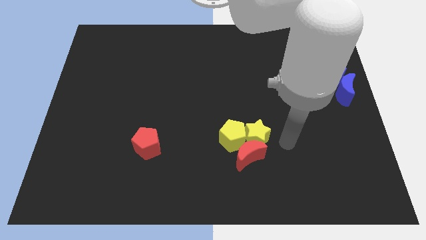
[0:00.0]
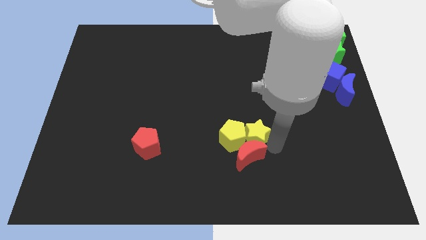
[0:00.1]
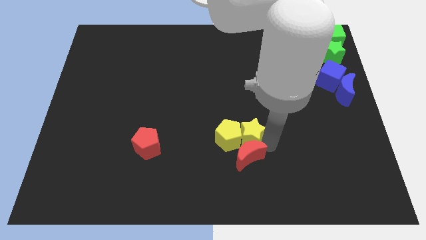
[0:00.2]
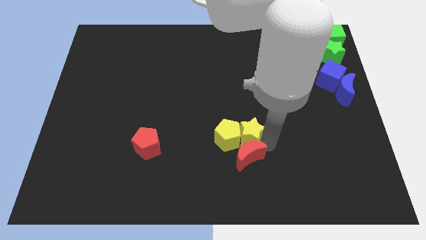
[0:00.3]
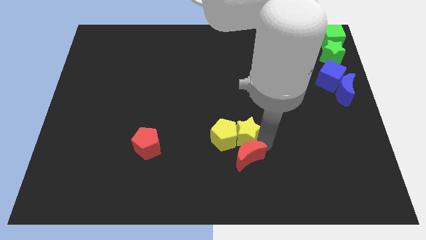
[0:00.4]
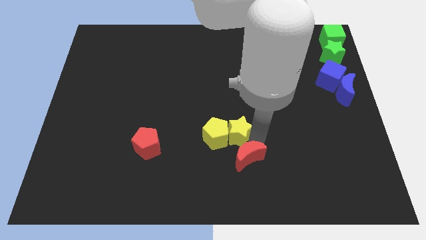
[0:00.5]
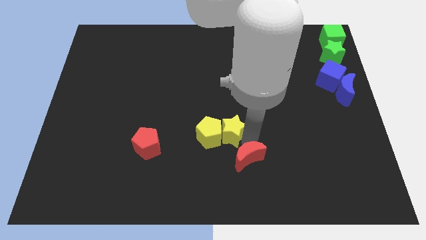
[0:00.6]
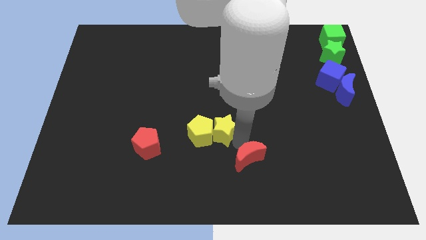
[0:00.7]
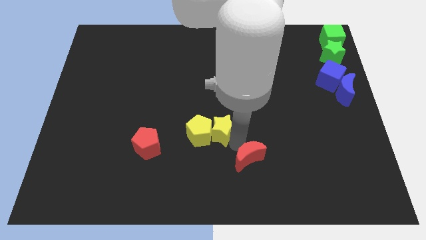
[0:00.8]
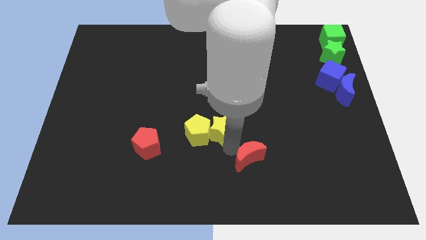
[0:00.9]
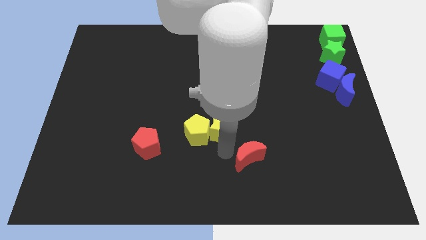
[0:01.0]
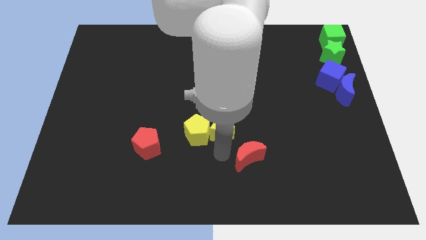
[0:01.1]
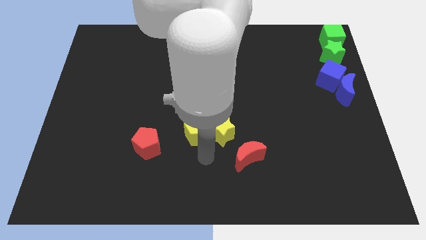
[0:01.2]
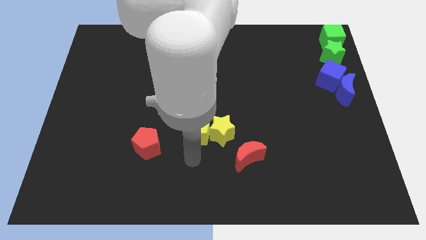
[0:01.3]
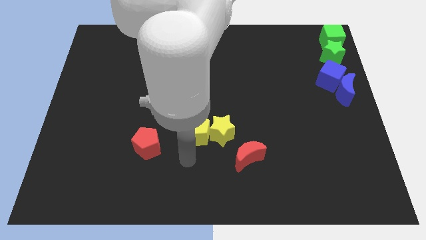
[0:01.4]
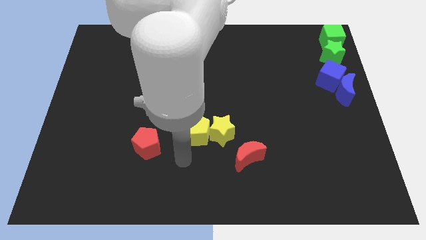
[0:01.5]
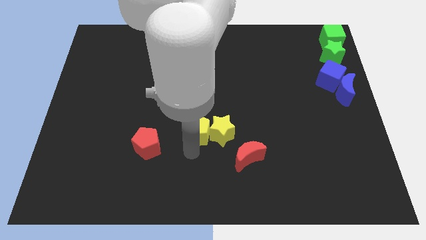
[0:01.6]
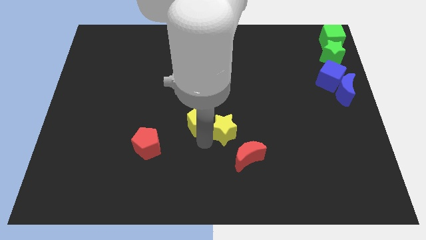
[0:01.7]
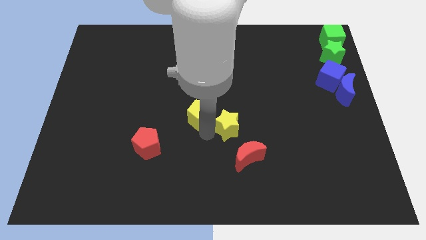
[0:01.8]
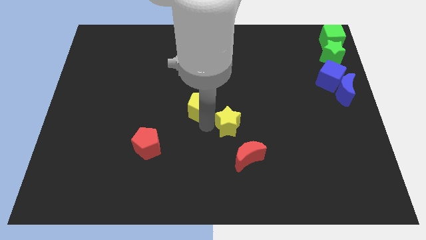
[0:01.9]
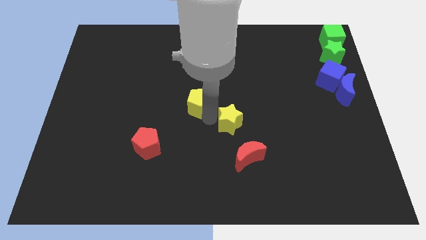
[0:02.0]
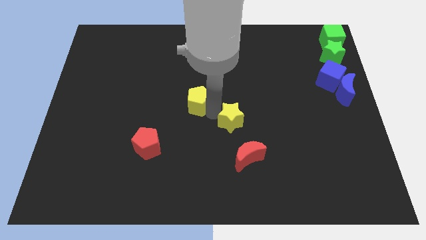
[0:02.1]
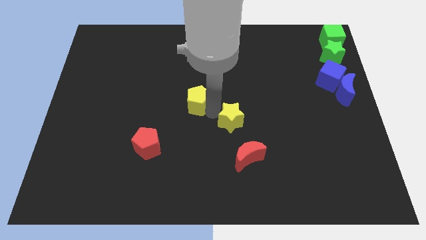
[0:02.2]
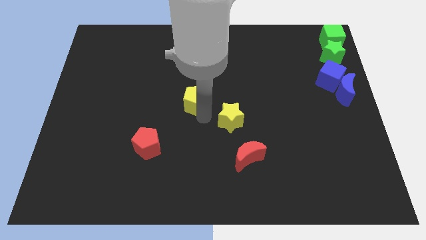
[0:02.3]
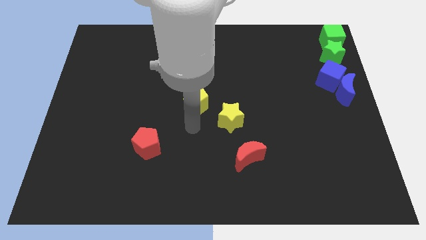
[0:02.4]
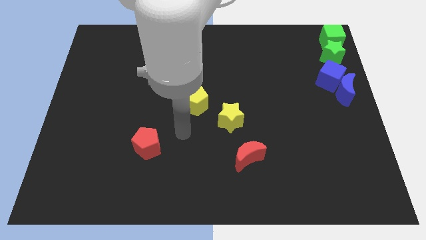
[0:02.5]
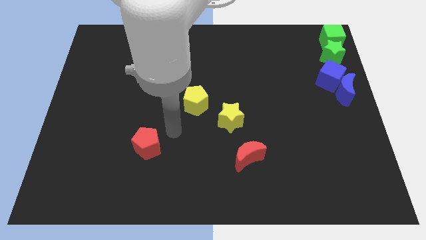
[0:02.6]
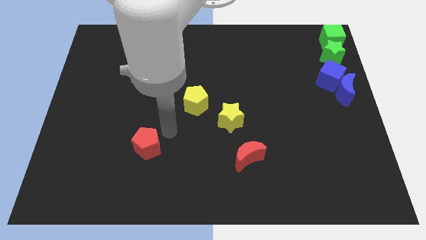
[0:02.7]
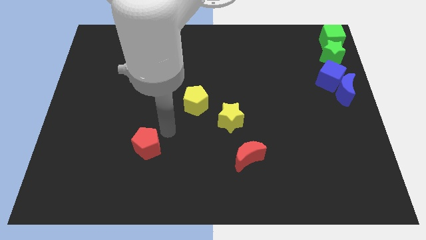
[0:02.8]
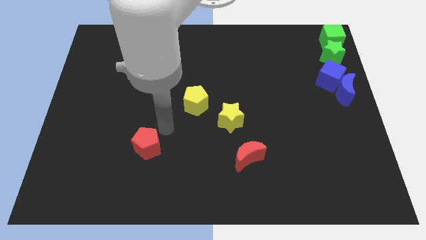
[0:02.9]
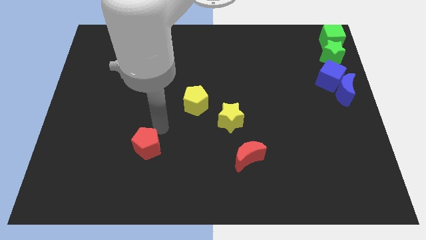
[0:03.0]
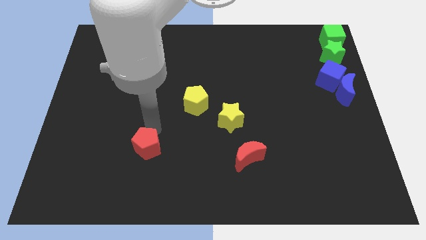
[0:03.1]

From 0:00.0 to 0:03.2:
separate both the yellow blocks to each other

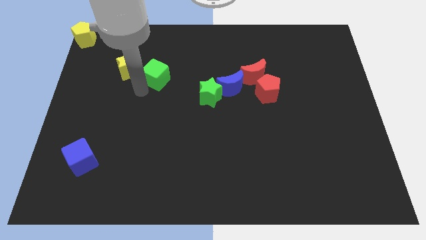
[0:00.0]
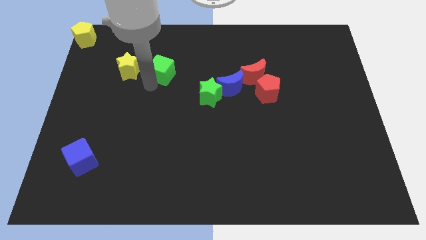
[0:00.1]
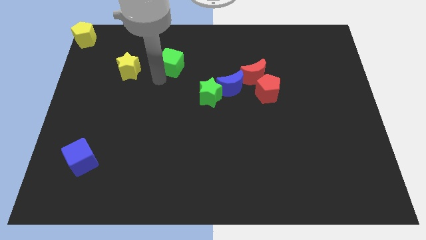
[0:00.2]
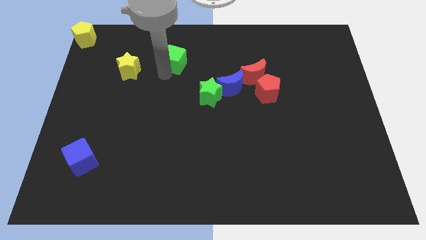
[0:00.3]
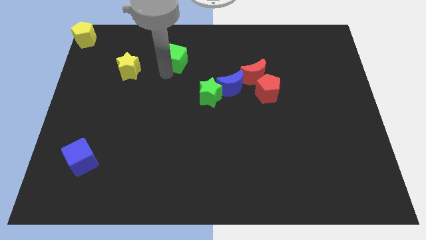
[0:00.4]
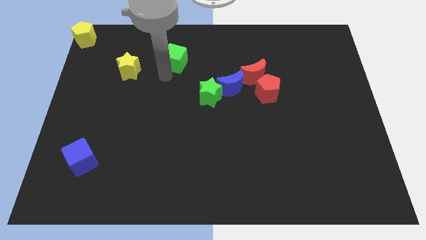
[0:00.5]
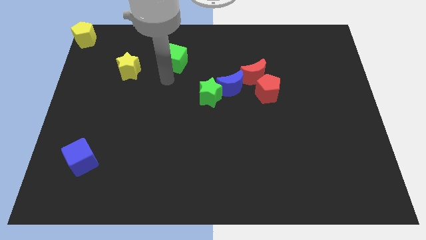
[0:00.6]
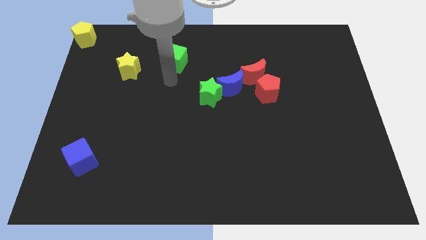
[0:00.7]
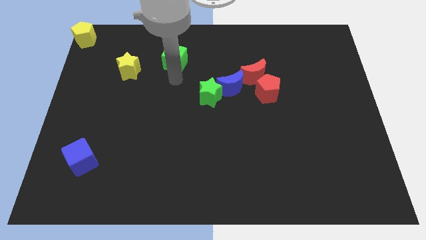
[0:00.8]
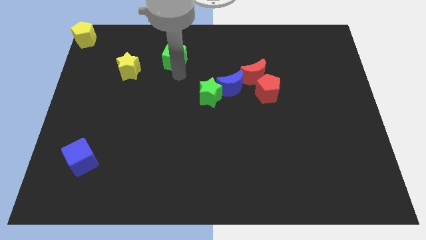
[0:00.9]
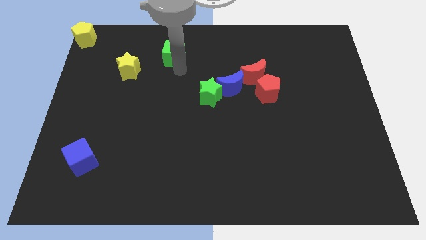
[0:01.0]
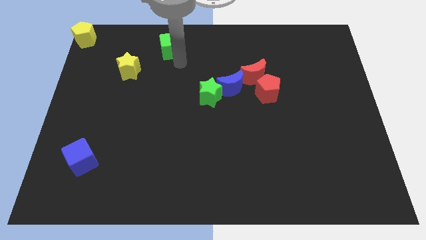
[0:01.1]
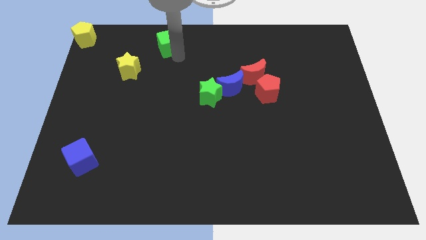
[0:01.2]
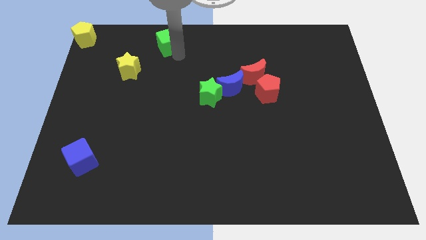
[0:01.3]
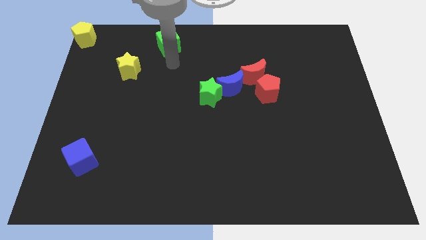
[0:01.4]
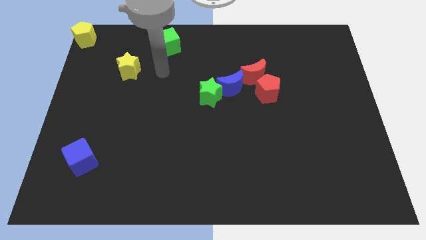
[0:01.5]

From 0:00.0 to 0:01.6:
move green cube to the top

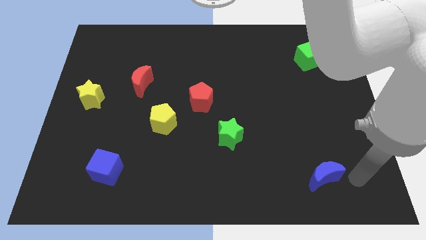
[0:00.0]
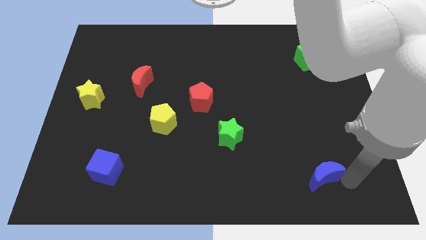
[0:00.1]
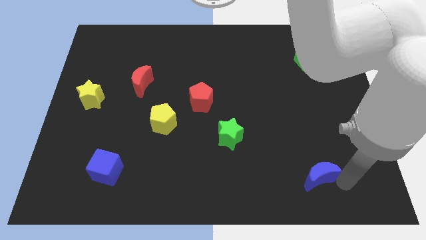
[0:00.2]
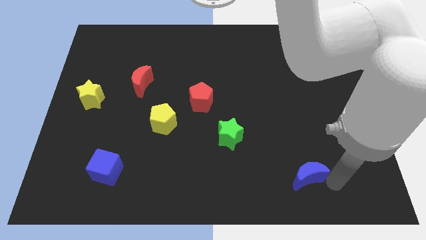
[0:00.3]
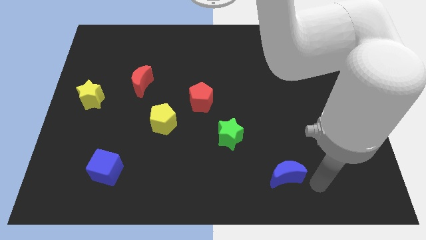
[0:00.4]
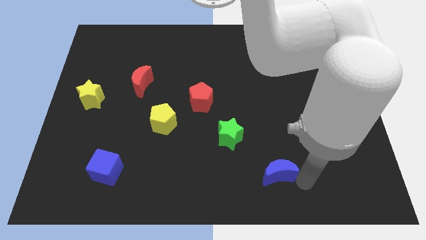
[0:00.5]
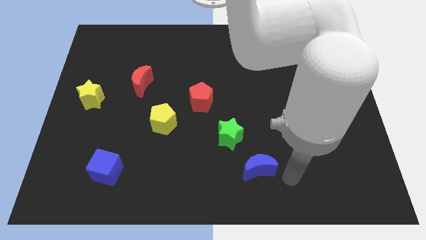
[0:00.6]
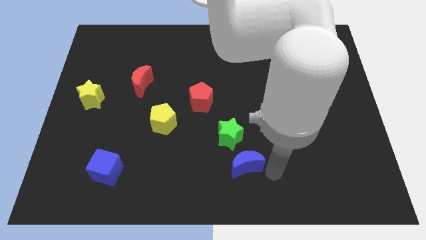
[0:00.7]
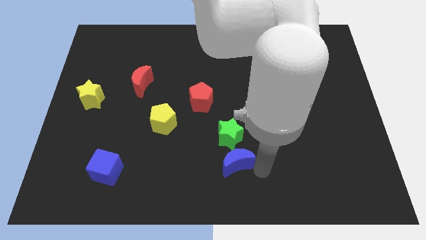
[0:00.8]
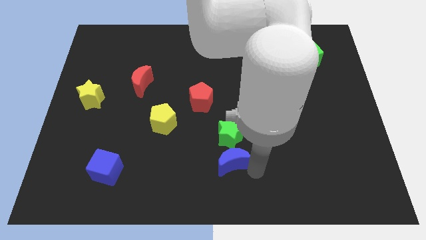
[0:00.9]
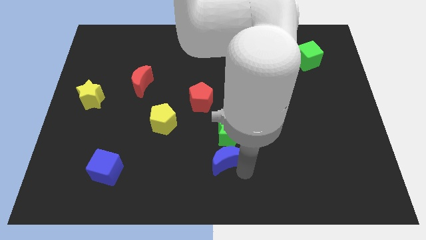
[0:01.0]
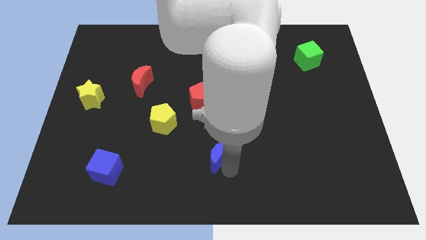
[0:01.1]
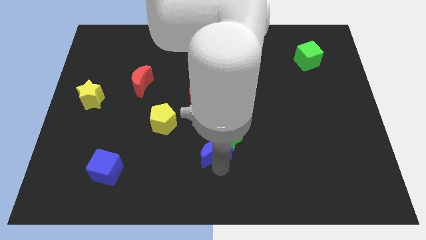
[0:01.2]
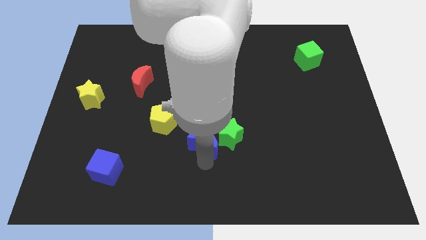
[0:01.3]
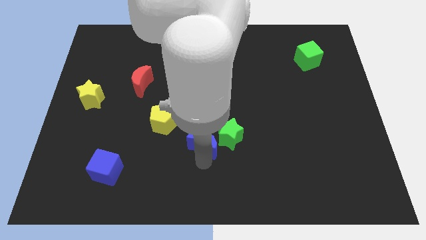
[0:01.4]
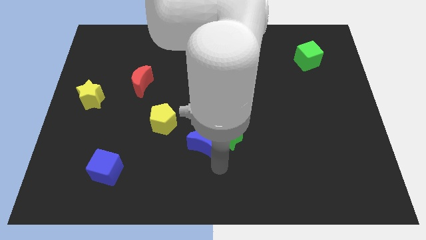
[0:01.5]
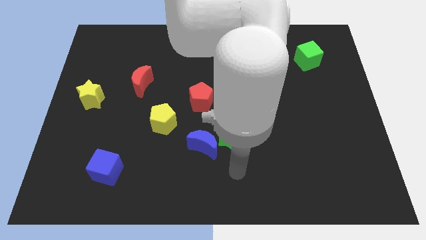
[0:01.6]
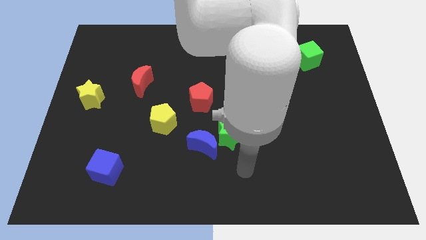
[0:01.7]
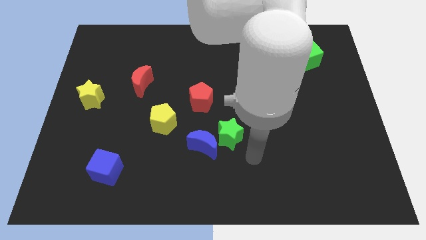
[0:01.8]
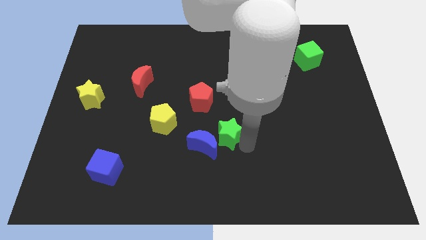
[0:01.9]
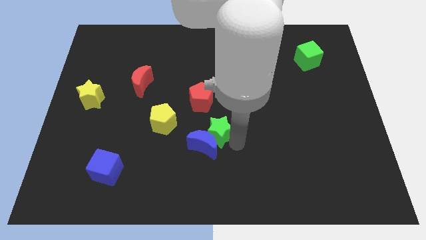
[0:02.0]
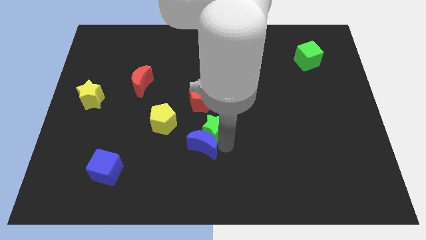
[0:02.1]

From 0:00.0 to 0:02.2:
push blue moon close to green star

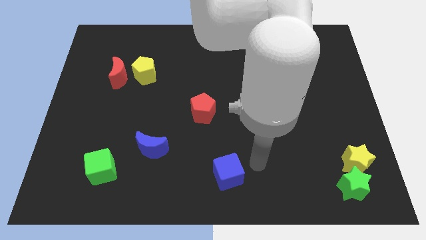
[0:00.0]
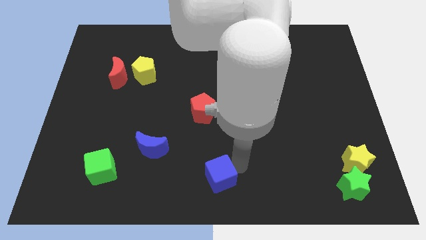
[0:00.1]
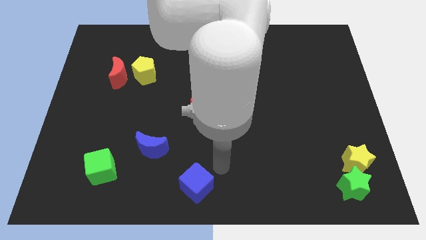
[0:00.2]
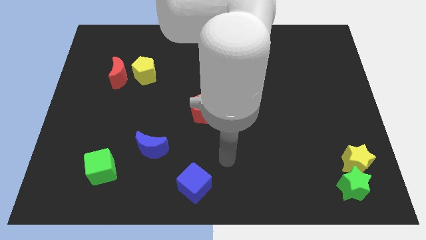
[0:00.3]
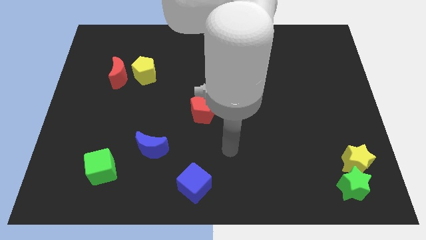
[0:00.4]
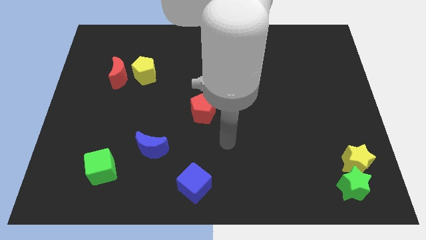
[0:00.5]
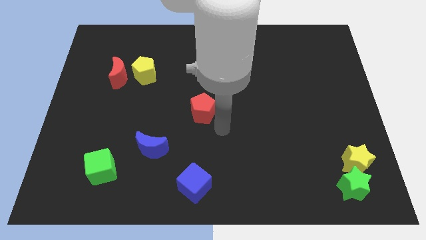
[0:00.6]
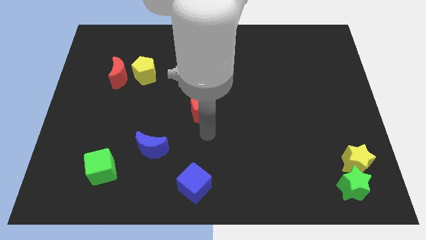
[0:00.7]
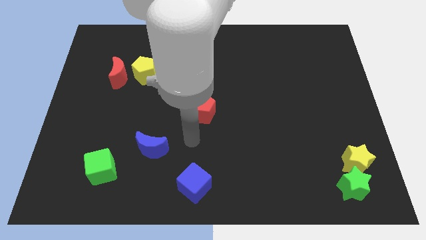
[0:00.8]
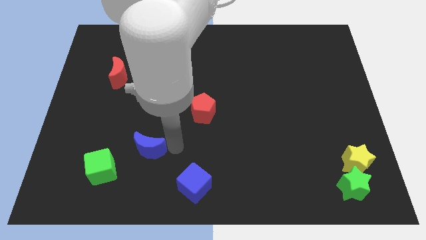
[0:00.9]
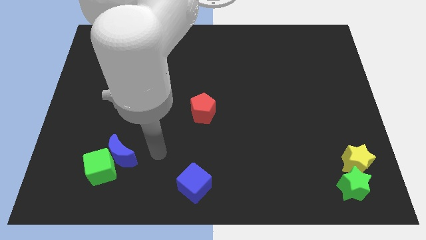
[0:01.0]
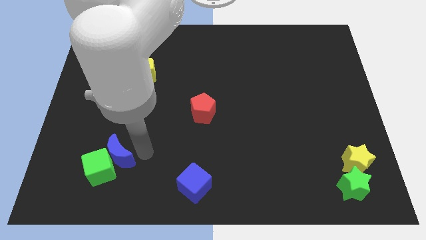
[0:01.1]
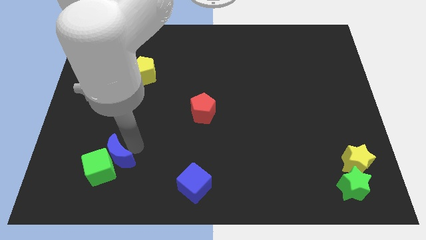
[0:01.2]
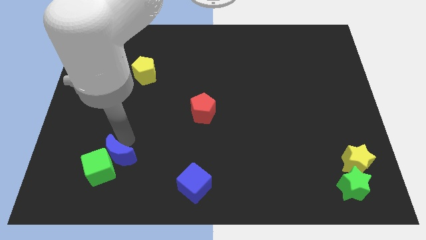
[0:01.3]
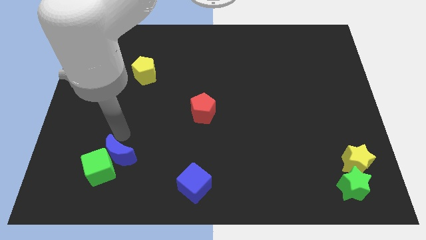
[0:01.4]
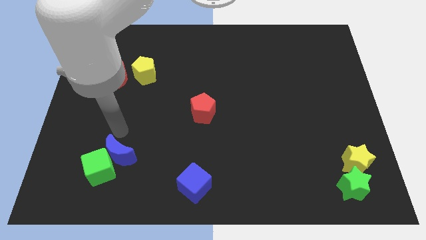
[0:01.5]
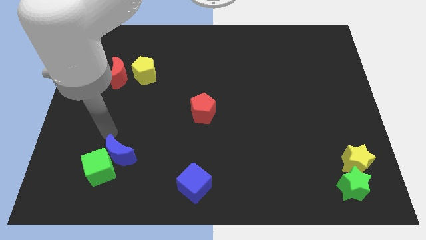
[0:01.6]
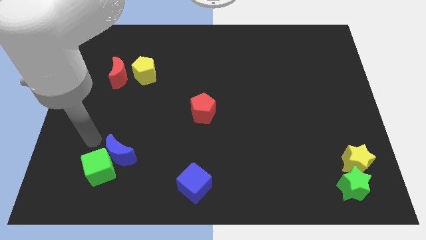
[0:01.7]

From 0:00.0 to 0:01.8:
push the blue crescent into the green cube

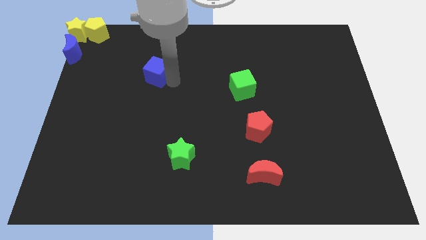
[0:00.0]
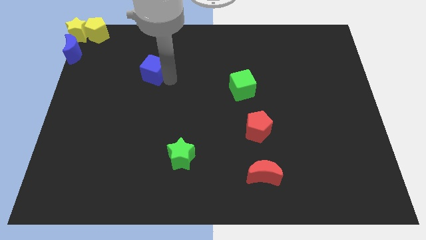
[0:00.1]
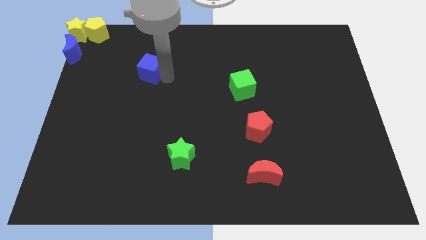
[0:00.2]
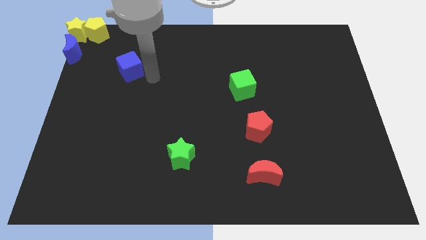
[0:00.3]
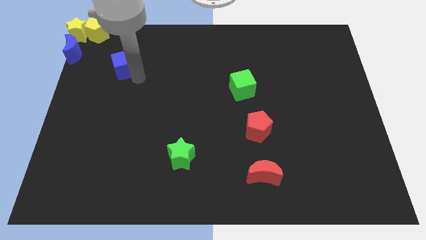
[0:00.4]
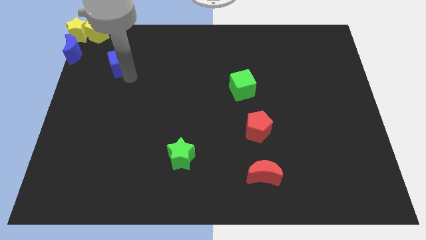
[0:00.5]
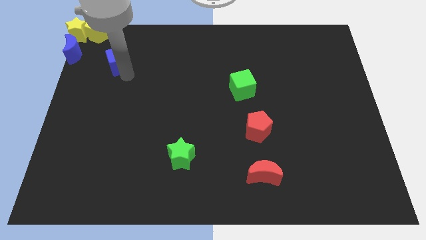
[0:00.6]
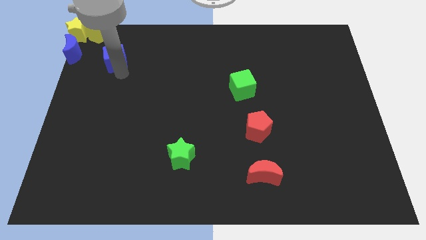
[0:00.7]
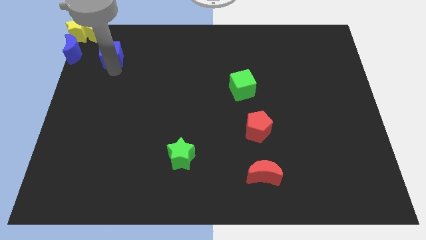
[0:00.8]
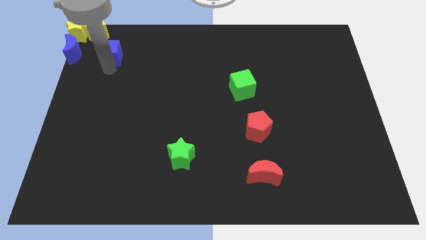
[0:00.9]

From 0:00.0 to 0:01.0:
slide blue cube towards yellow pentagon
